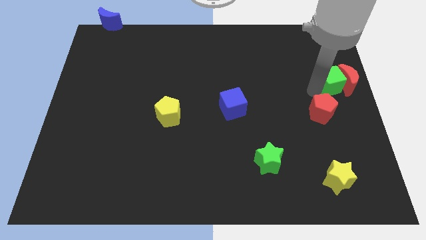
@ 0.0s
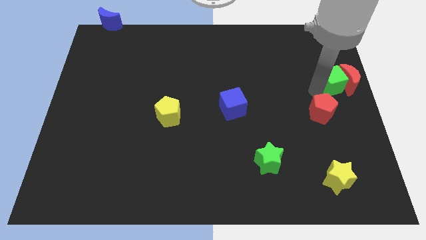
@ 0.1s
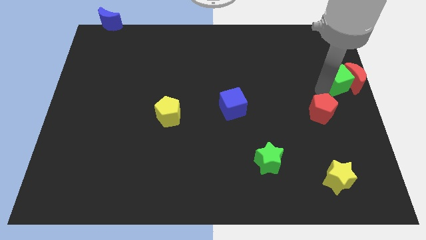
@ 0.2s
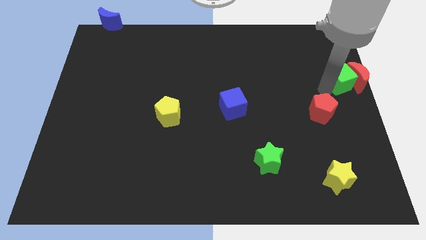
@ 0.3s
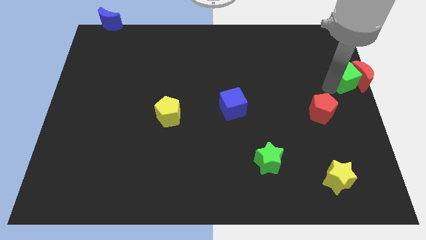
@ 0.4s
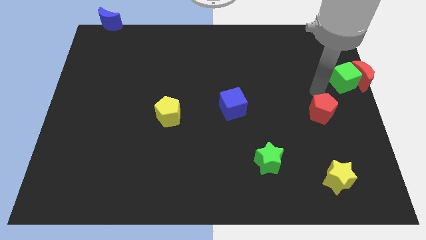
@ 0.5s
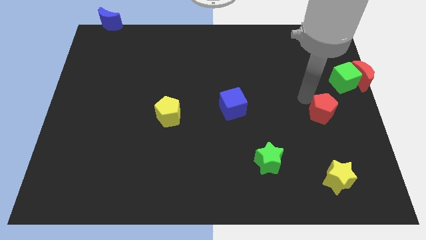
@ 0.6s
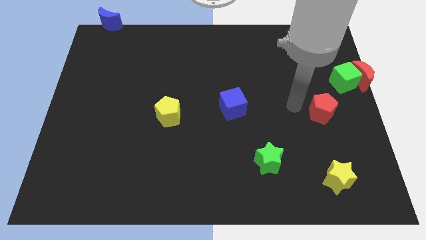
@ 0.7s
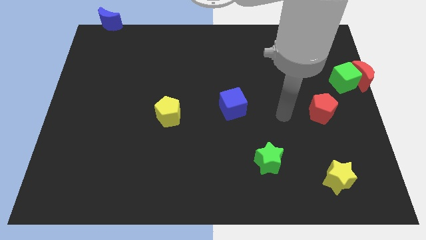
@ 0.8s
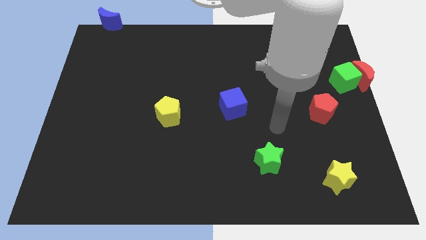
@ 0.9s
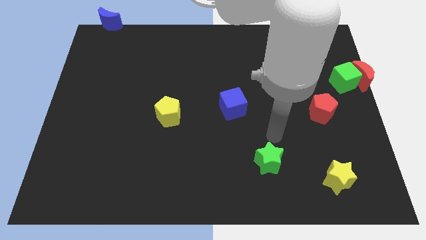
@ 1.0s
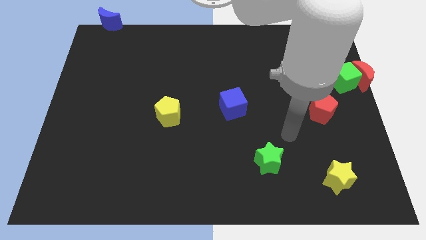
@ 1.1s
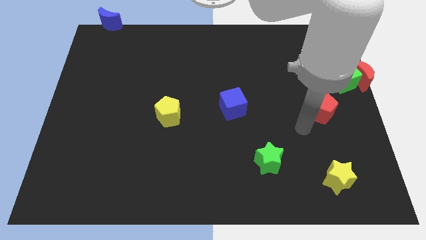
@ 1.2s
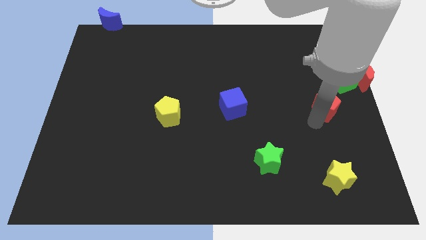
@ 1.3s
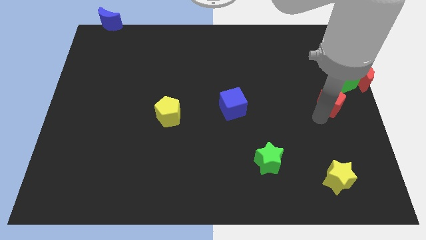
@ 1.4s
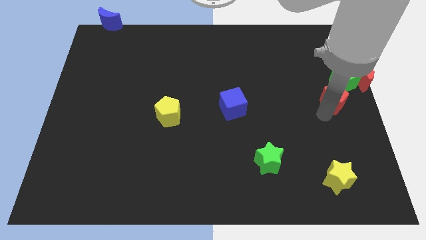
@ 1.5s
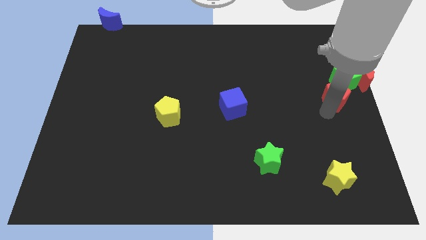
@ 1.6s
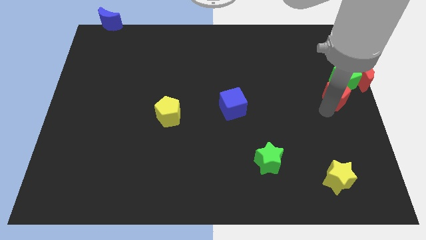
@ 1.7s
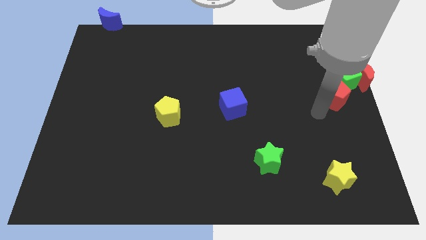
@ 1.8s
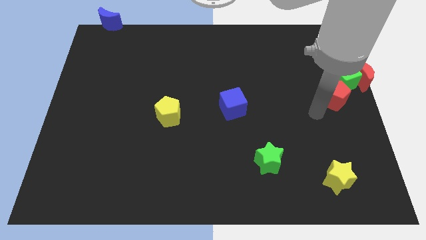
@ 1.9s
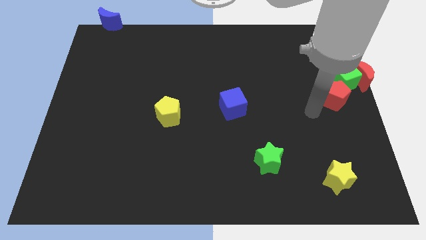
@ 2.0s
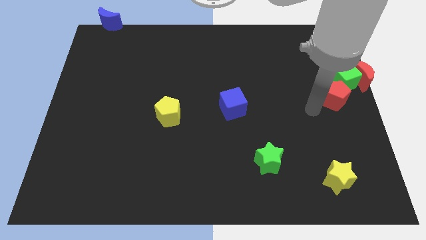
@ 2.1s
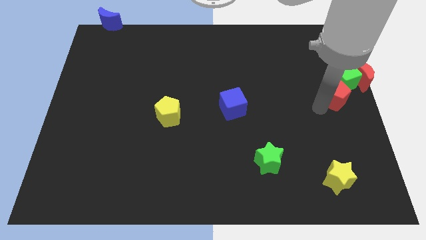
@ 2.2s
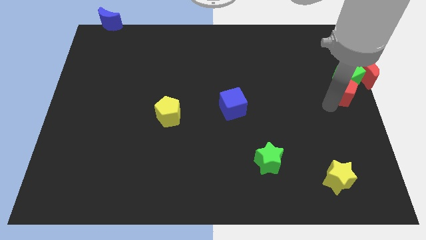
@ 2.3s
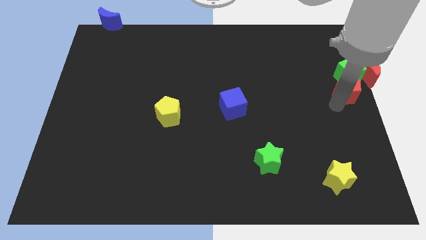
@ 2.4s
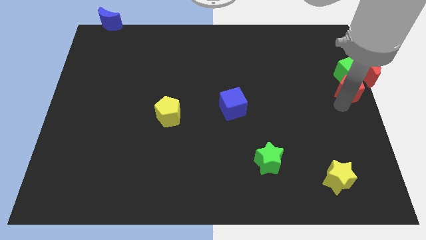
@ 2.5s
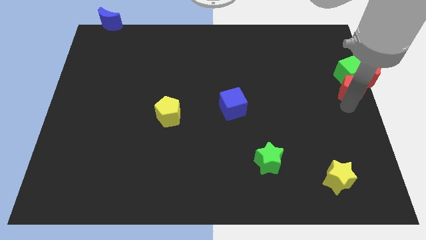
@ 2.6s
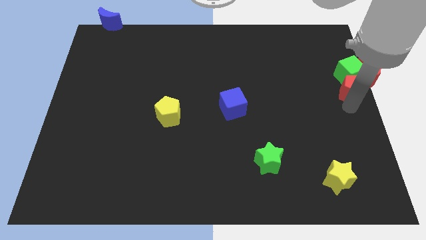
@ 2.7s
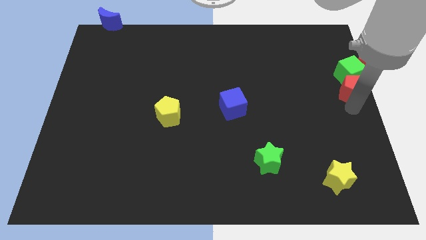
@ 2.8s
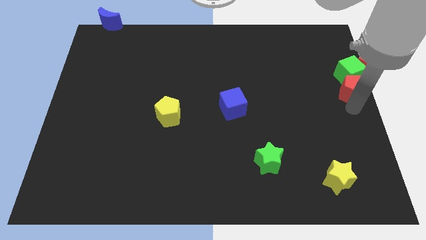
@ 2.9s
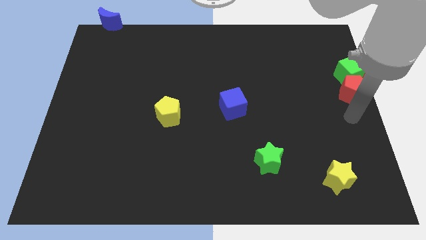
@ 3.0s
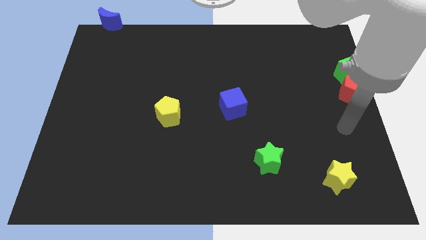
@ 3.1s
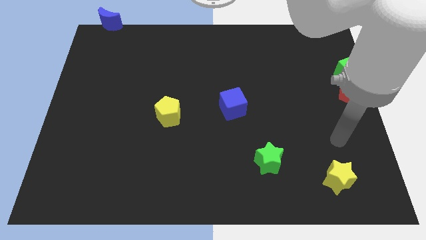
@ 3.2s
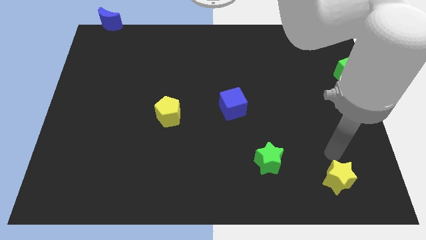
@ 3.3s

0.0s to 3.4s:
move the red pentagon into the green cube

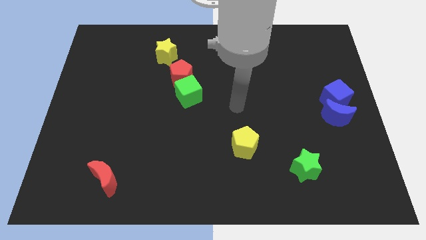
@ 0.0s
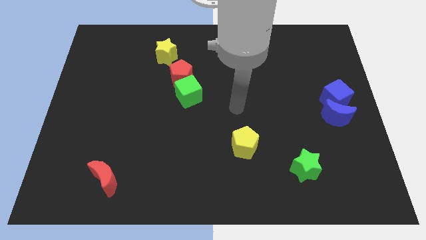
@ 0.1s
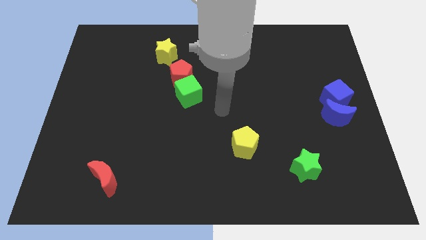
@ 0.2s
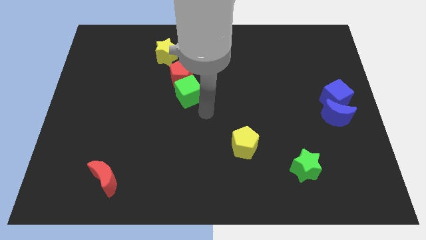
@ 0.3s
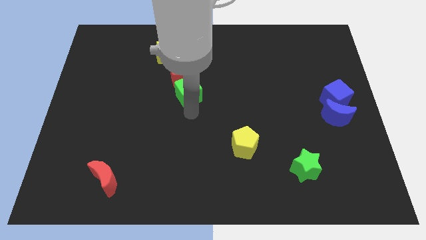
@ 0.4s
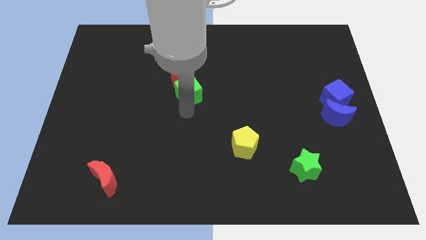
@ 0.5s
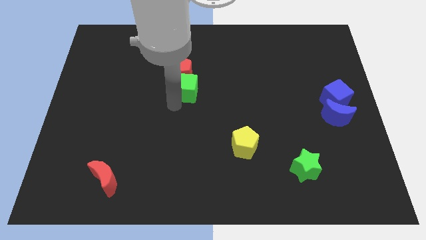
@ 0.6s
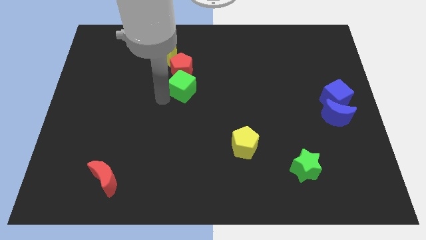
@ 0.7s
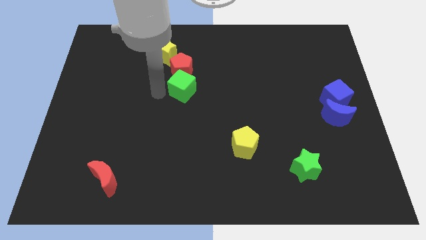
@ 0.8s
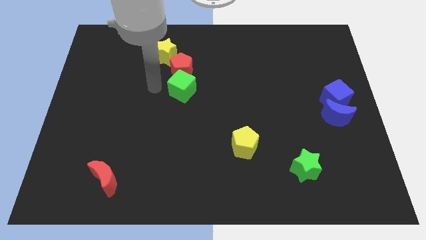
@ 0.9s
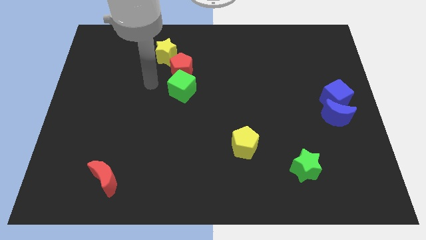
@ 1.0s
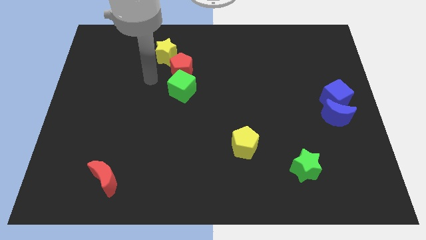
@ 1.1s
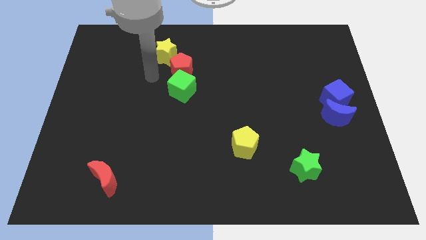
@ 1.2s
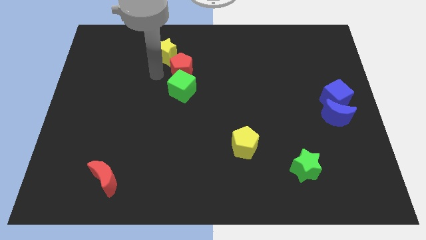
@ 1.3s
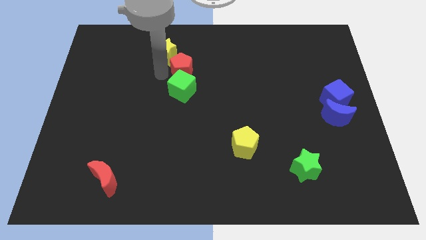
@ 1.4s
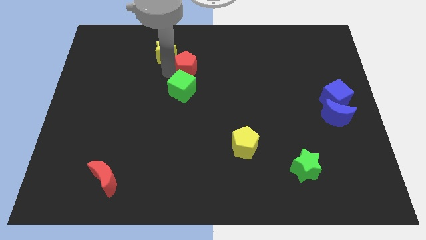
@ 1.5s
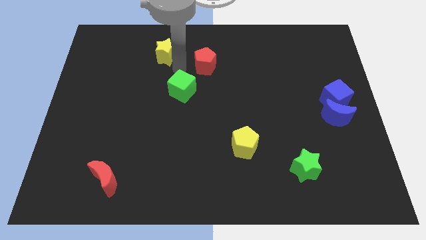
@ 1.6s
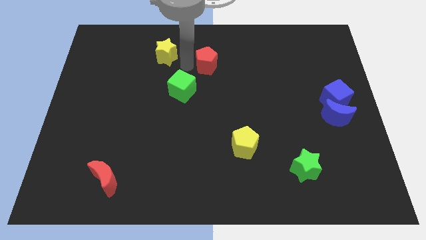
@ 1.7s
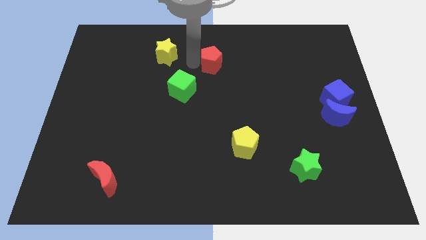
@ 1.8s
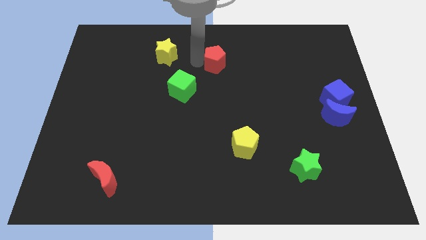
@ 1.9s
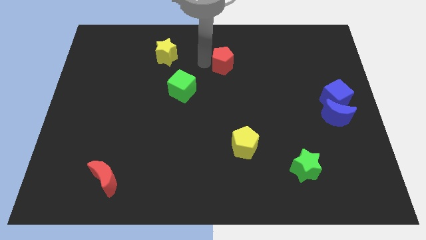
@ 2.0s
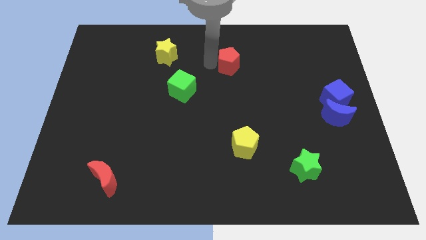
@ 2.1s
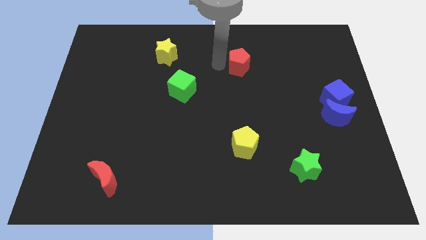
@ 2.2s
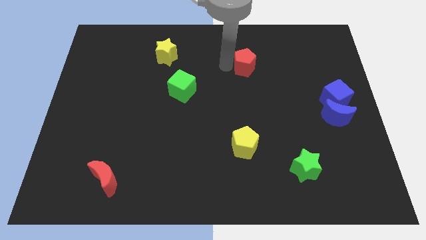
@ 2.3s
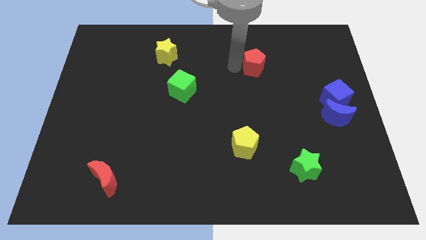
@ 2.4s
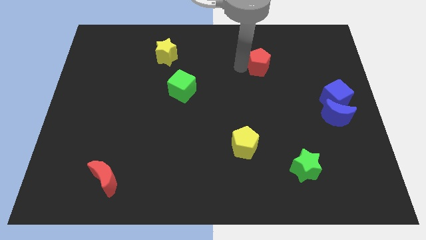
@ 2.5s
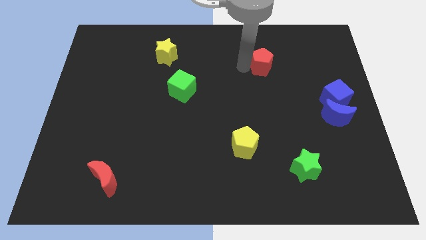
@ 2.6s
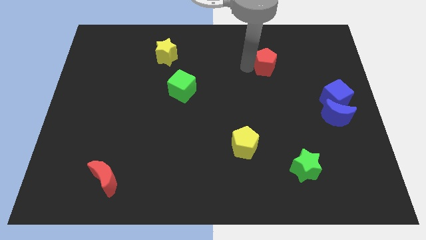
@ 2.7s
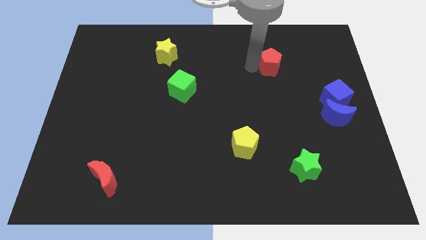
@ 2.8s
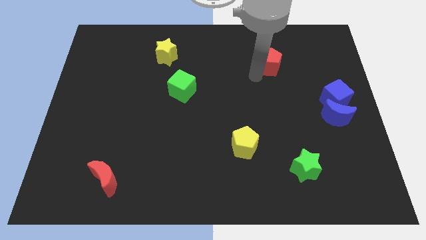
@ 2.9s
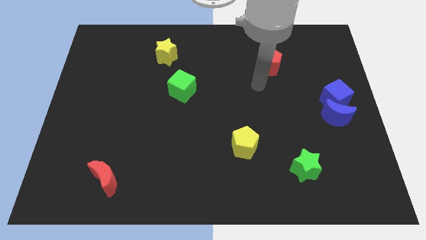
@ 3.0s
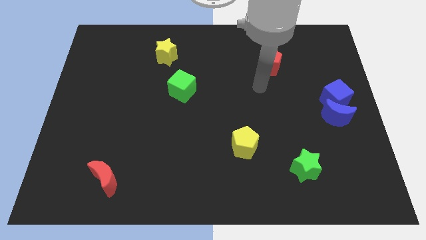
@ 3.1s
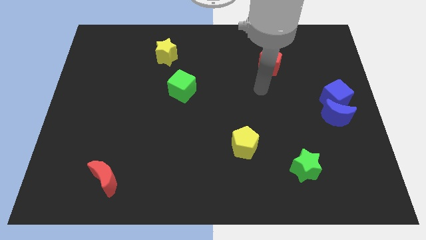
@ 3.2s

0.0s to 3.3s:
separate red pentagon from the group of blocks

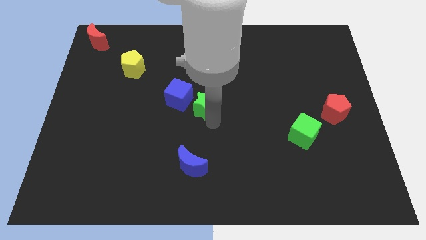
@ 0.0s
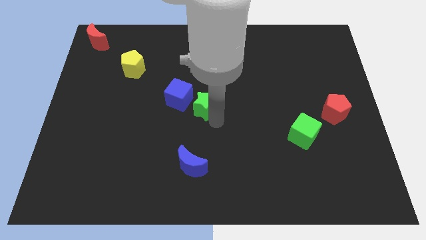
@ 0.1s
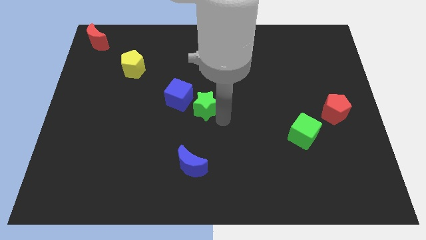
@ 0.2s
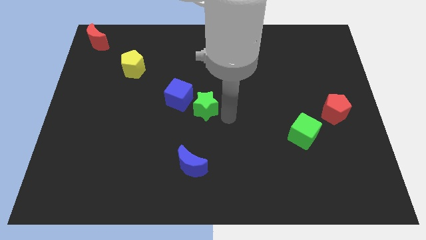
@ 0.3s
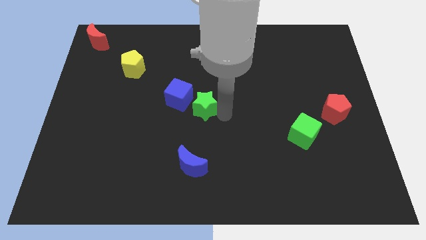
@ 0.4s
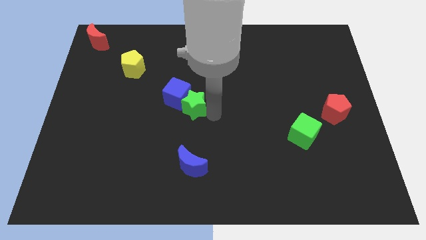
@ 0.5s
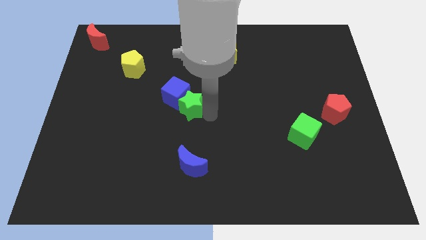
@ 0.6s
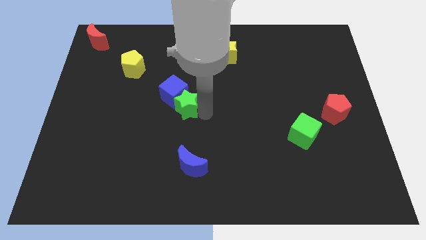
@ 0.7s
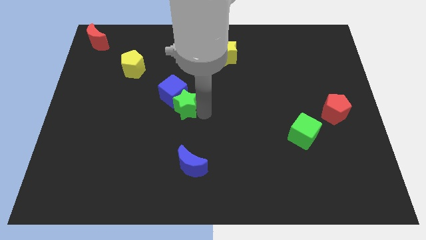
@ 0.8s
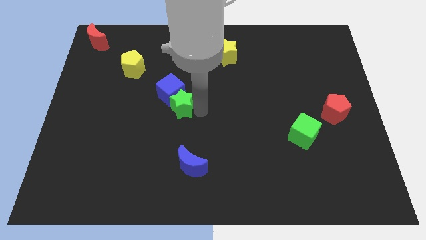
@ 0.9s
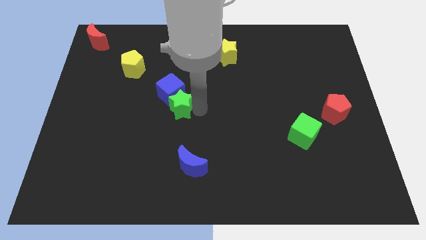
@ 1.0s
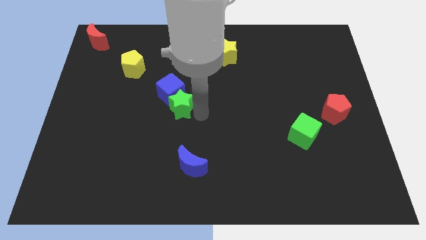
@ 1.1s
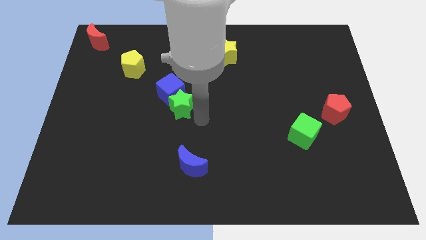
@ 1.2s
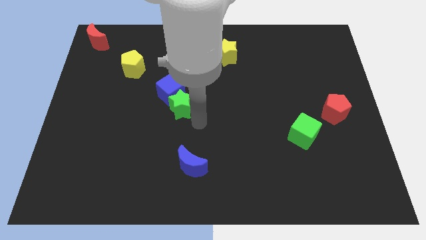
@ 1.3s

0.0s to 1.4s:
move green star into blue cube

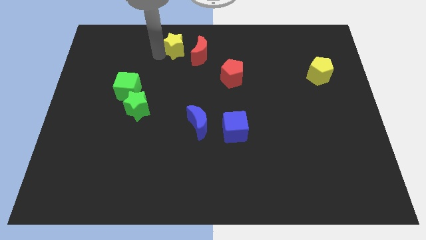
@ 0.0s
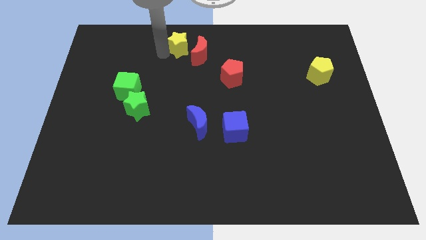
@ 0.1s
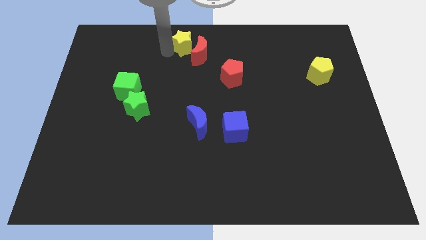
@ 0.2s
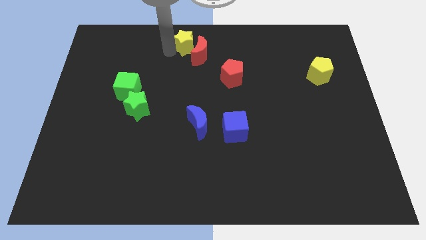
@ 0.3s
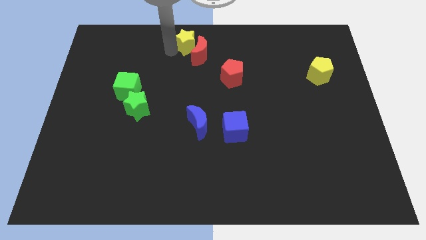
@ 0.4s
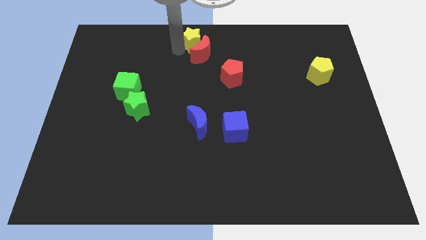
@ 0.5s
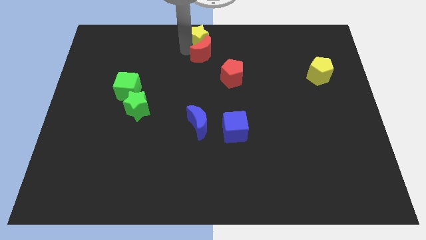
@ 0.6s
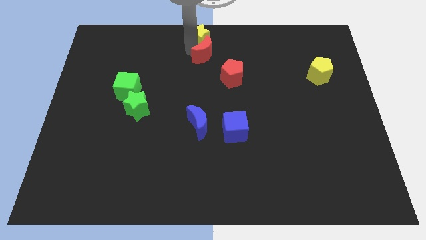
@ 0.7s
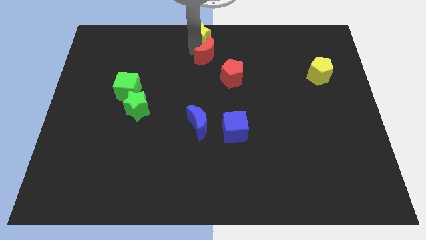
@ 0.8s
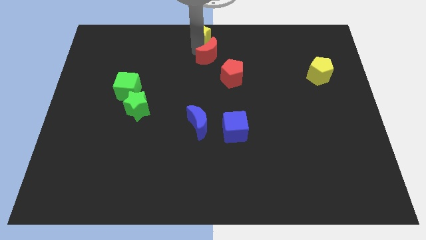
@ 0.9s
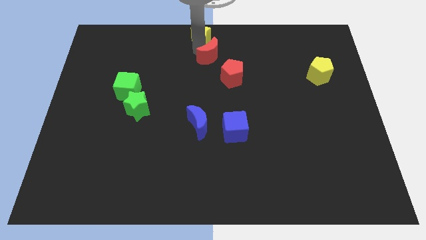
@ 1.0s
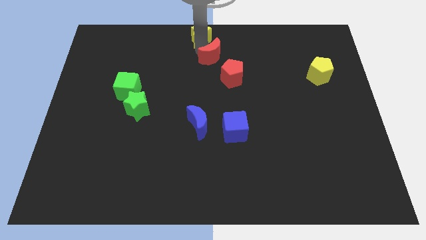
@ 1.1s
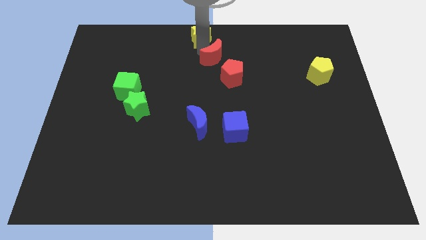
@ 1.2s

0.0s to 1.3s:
put the yellow star at the top center of the board
